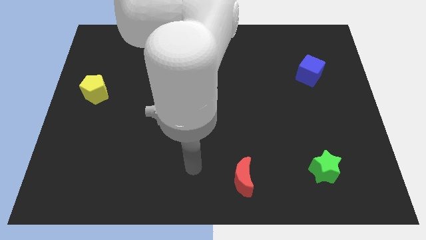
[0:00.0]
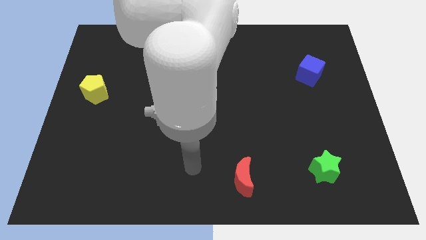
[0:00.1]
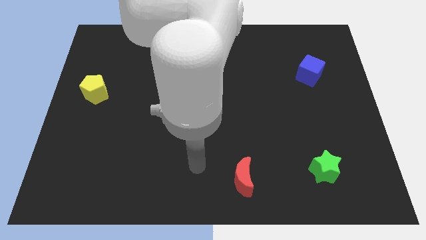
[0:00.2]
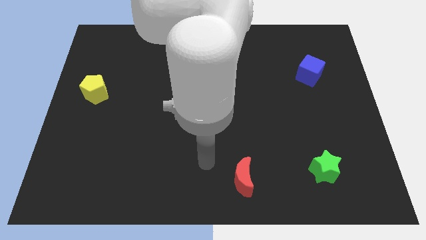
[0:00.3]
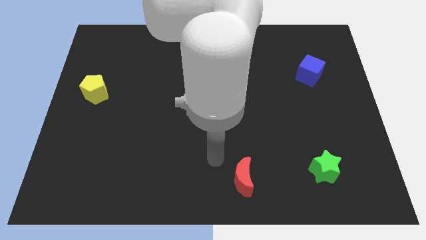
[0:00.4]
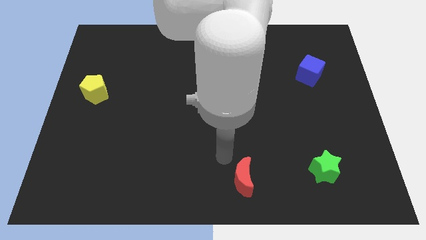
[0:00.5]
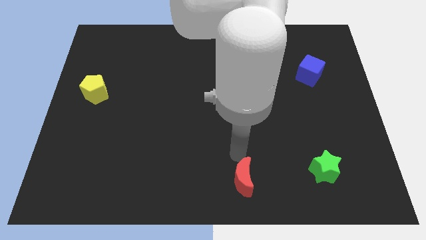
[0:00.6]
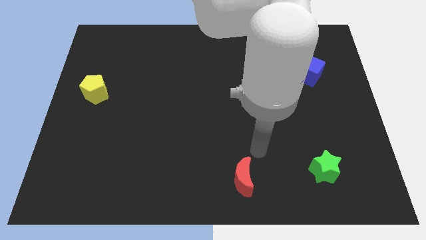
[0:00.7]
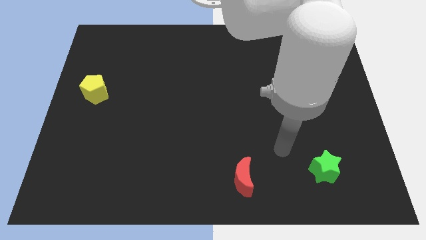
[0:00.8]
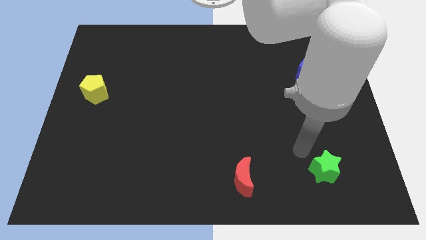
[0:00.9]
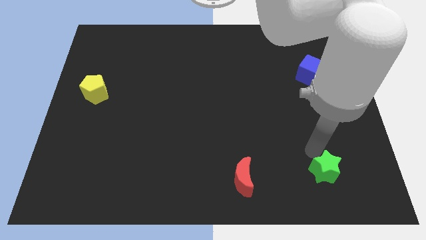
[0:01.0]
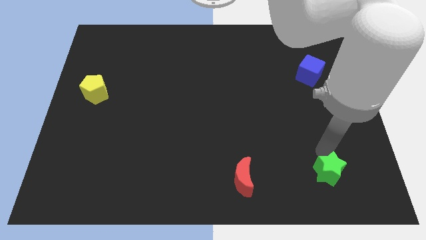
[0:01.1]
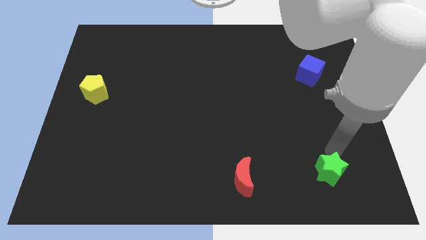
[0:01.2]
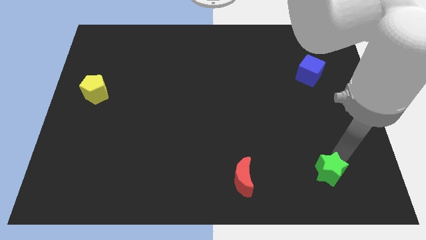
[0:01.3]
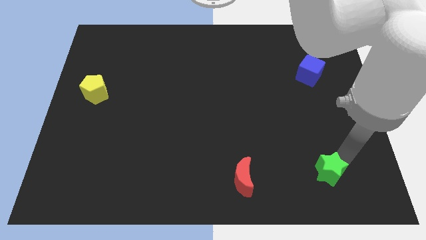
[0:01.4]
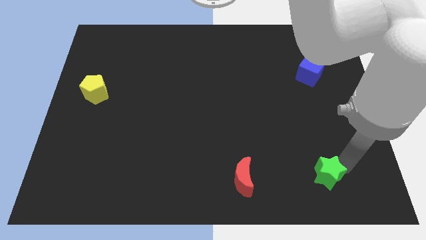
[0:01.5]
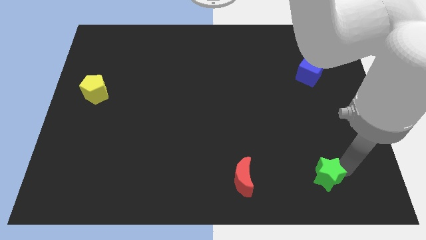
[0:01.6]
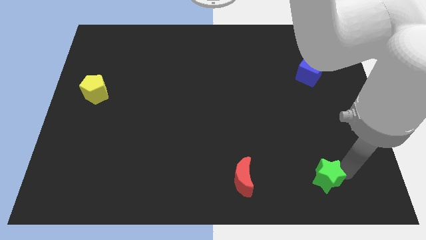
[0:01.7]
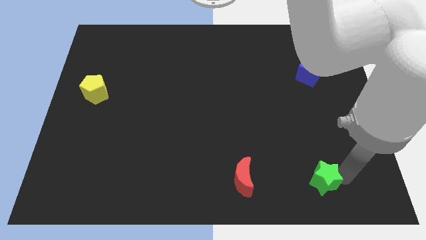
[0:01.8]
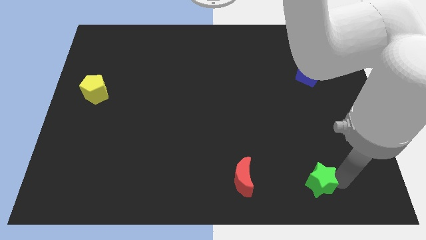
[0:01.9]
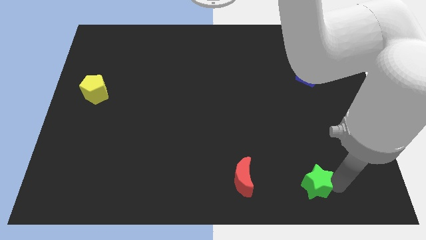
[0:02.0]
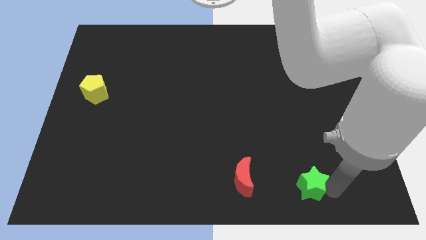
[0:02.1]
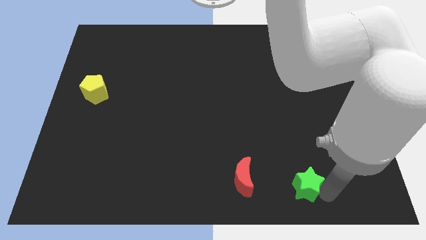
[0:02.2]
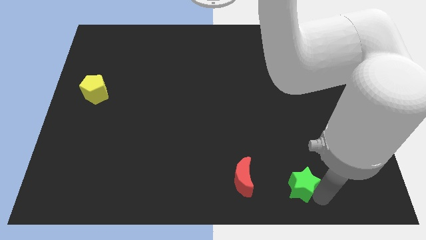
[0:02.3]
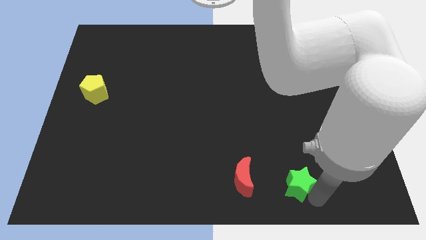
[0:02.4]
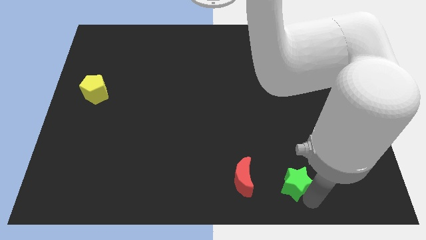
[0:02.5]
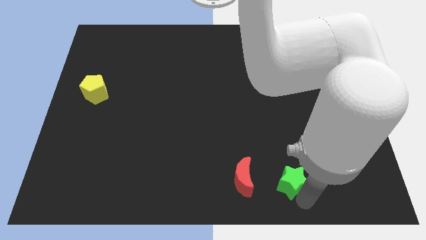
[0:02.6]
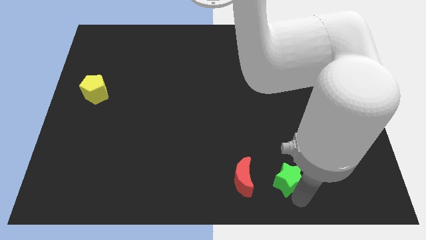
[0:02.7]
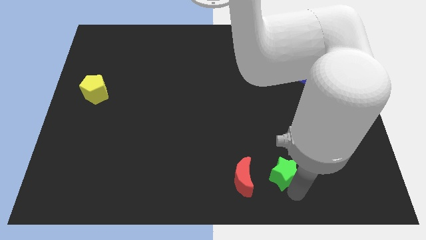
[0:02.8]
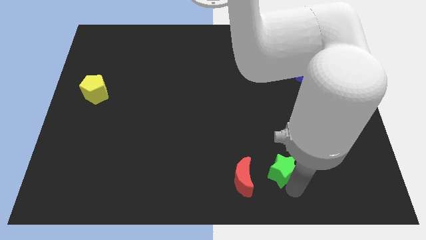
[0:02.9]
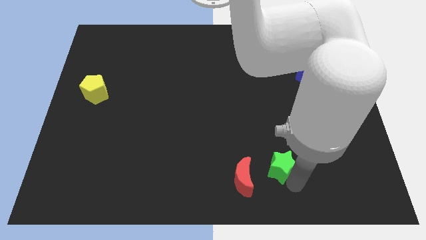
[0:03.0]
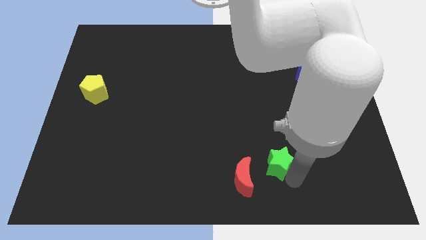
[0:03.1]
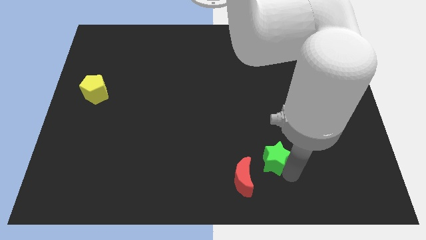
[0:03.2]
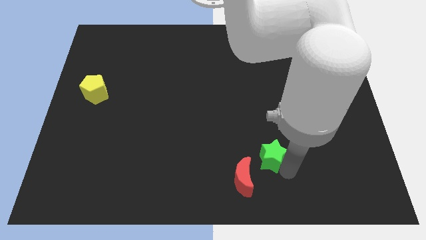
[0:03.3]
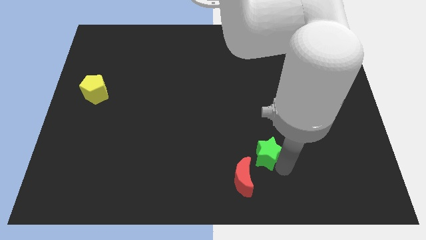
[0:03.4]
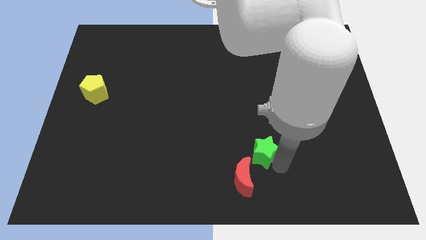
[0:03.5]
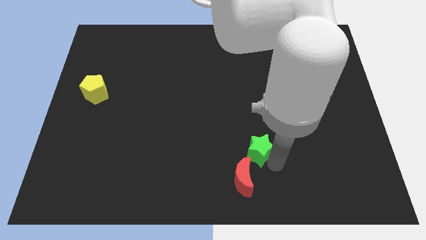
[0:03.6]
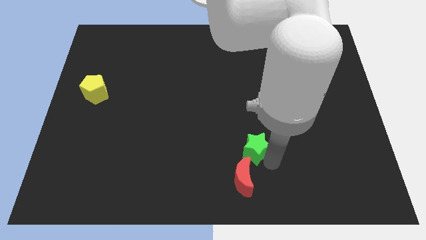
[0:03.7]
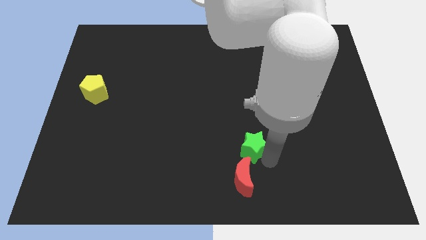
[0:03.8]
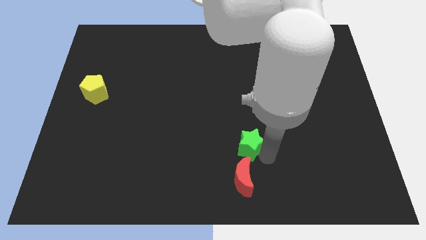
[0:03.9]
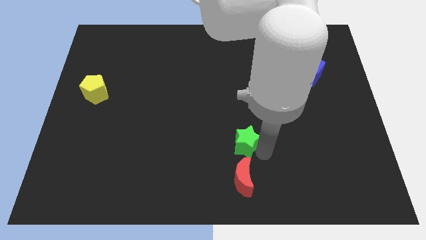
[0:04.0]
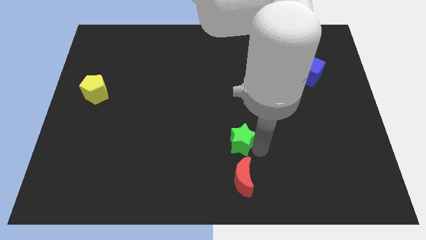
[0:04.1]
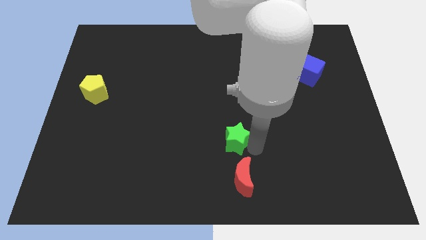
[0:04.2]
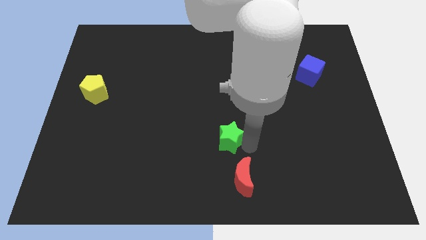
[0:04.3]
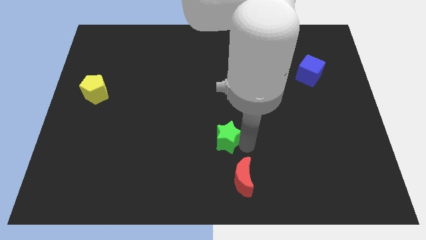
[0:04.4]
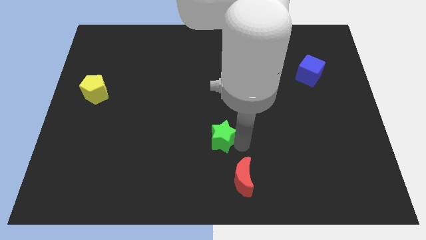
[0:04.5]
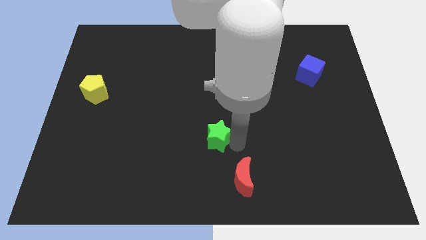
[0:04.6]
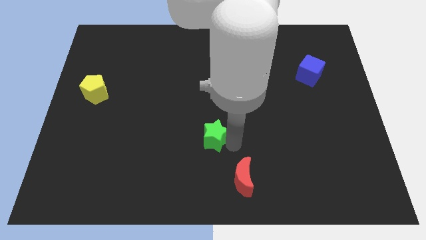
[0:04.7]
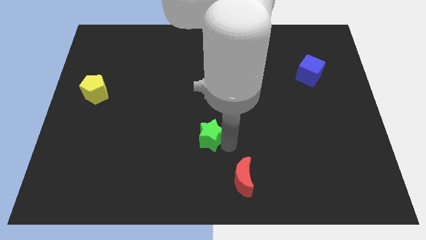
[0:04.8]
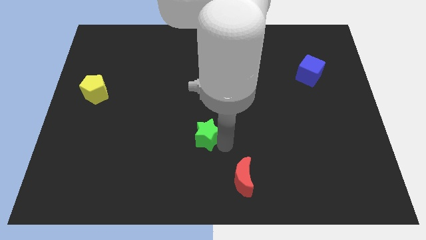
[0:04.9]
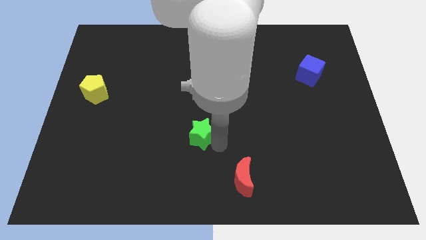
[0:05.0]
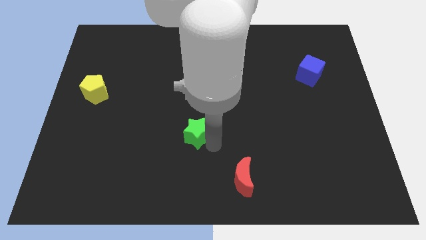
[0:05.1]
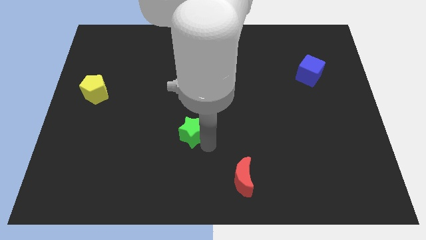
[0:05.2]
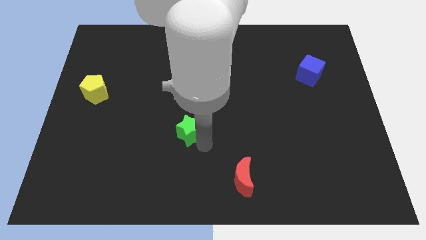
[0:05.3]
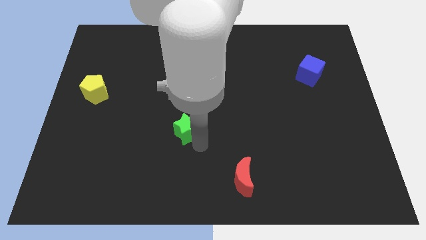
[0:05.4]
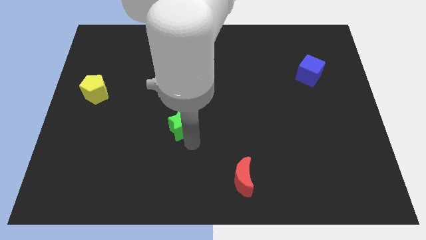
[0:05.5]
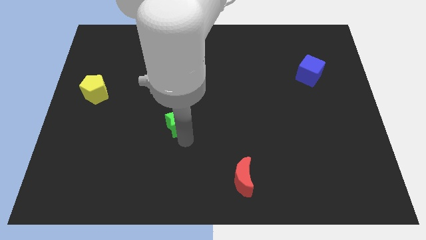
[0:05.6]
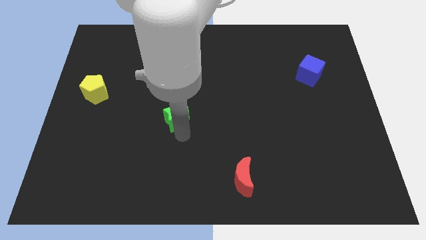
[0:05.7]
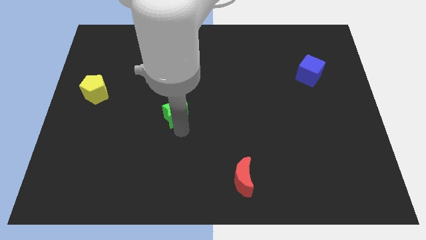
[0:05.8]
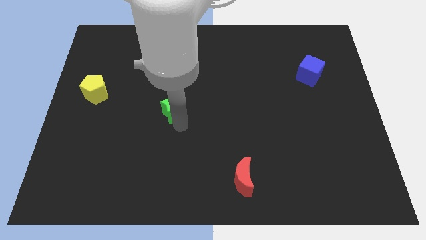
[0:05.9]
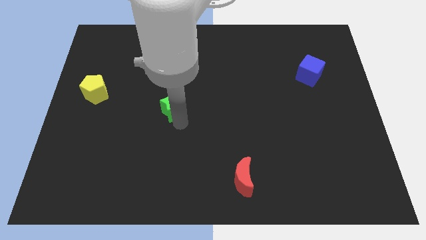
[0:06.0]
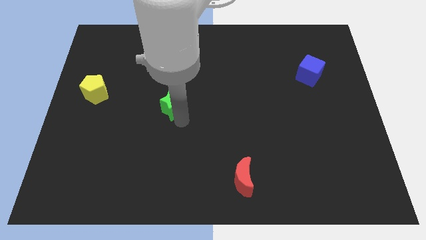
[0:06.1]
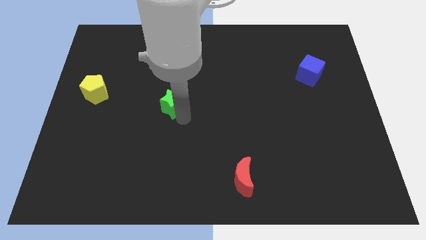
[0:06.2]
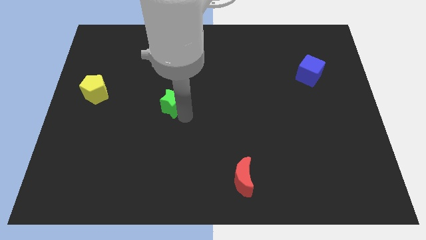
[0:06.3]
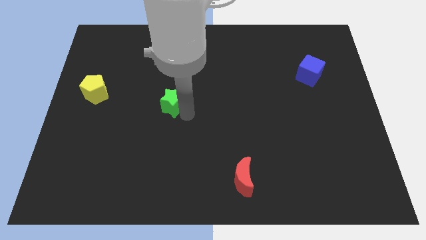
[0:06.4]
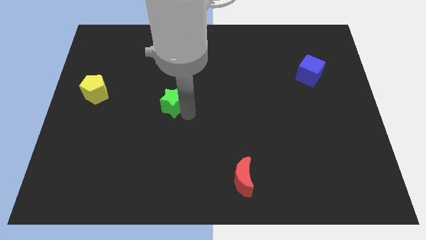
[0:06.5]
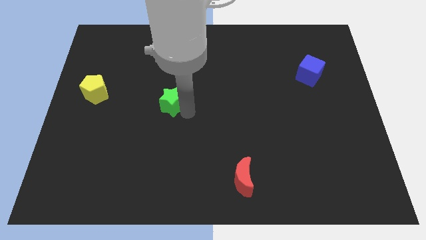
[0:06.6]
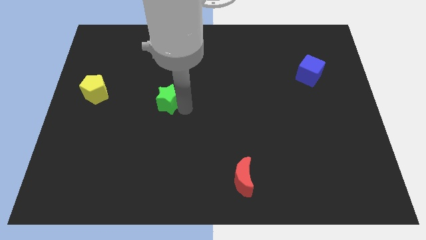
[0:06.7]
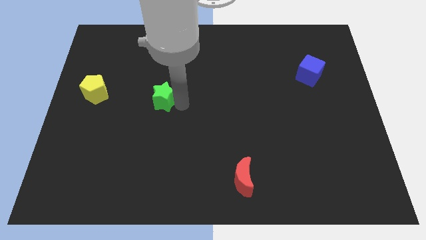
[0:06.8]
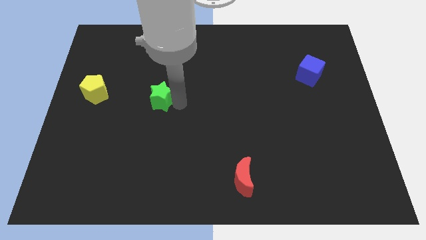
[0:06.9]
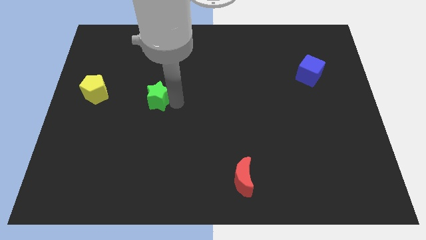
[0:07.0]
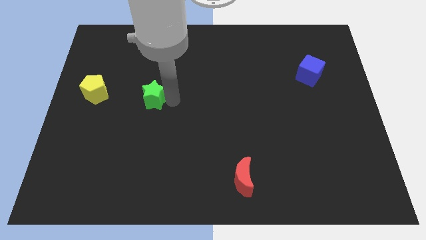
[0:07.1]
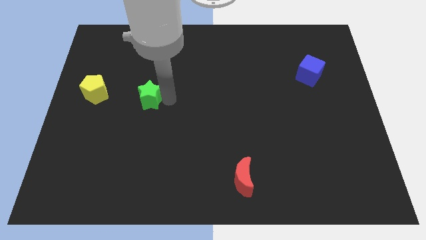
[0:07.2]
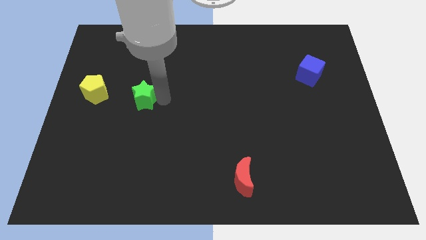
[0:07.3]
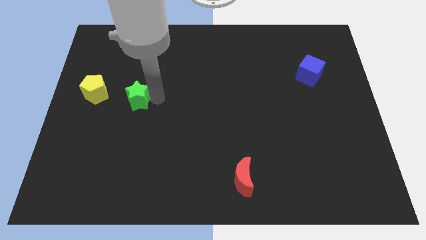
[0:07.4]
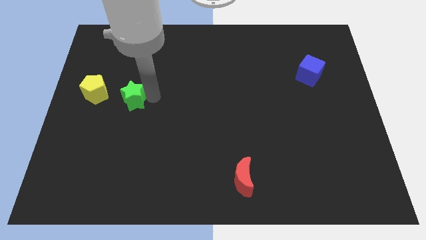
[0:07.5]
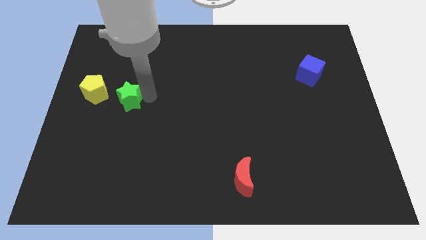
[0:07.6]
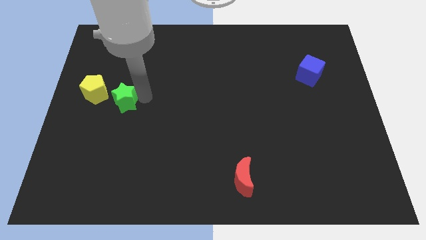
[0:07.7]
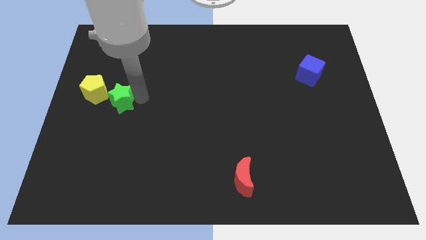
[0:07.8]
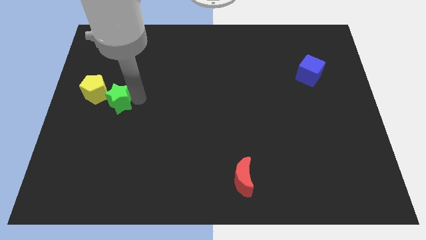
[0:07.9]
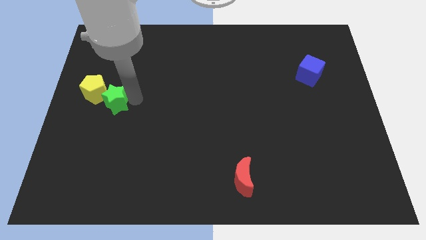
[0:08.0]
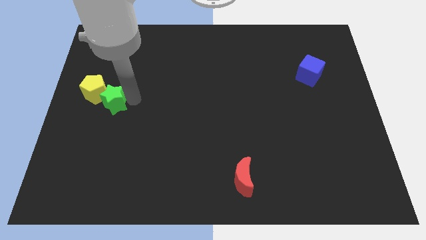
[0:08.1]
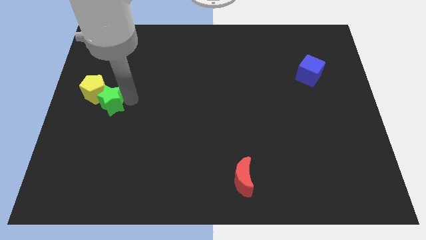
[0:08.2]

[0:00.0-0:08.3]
push the green star next to the yellow pentagon
